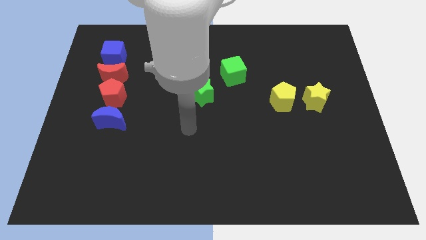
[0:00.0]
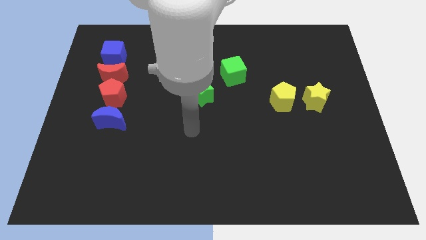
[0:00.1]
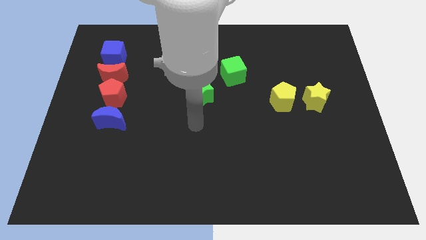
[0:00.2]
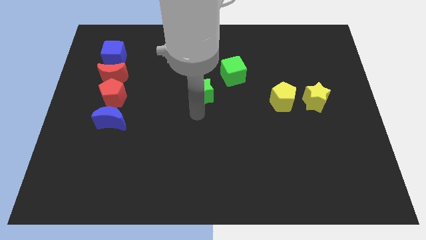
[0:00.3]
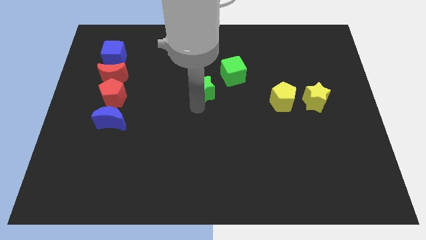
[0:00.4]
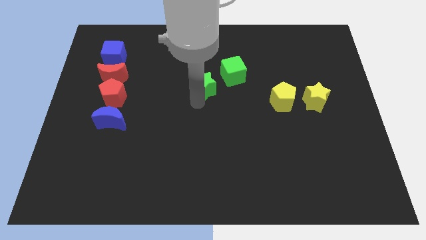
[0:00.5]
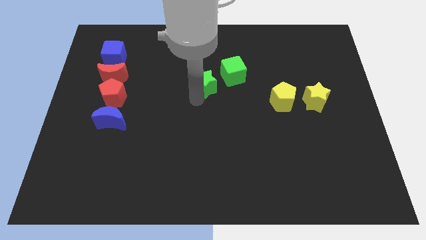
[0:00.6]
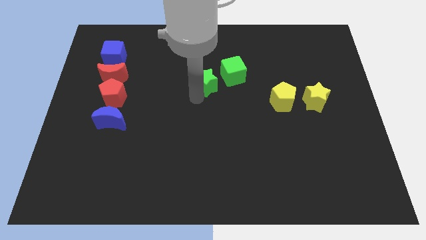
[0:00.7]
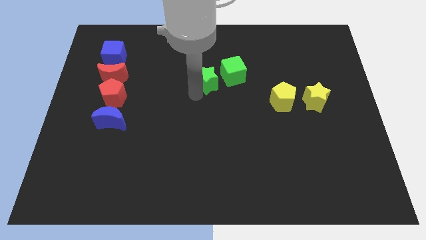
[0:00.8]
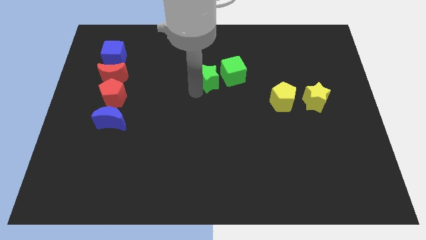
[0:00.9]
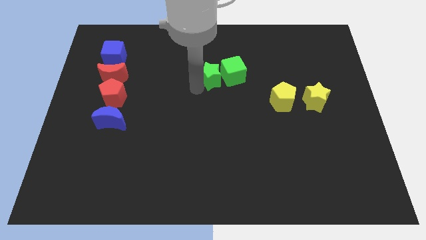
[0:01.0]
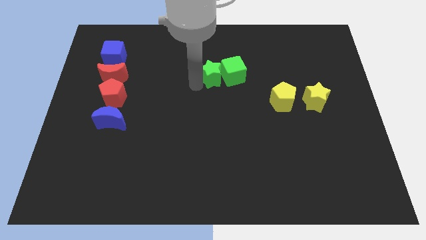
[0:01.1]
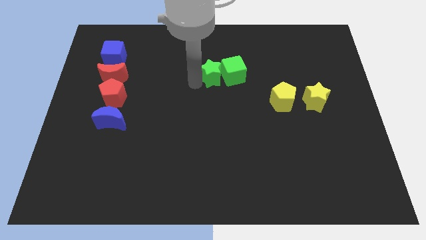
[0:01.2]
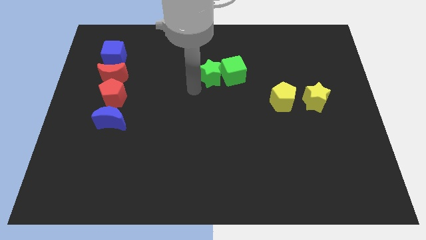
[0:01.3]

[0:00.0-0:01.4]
push the green star to the left of the green cube

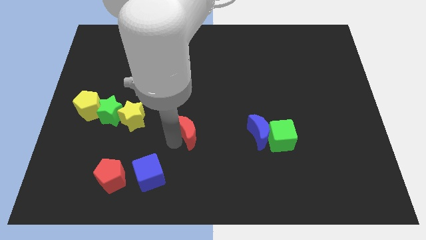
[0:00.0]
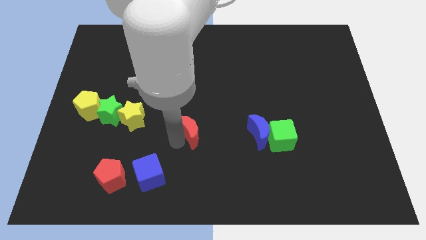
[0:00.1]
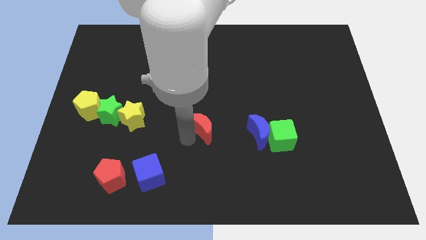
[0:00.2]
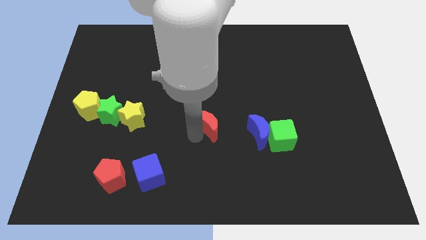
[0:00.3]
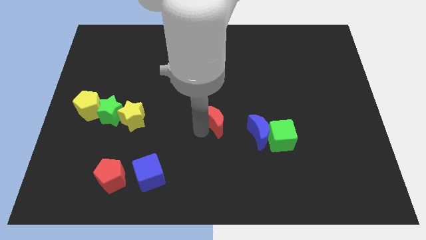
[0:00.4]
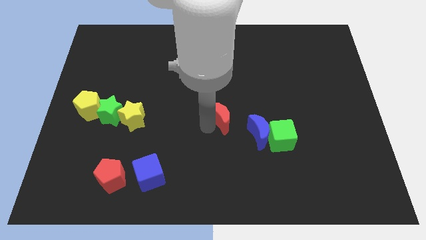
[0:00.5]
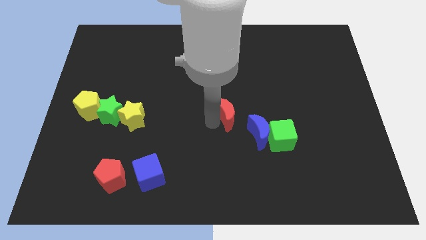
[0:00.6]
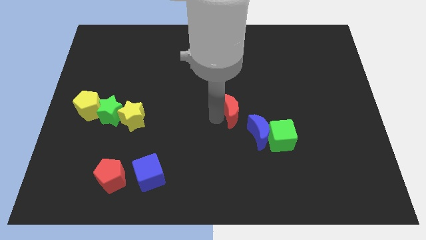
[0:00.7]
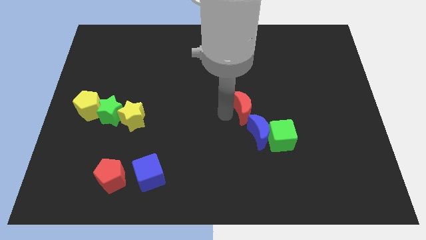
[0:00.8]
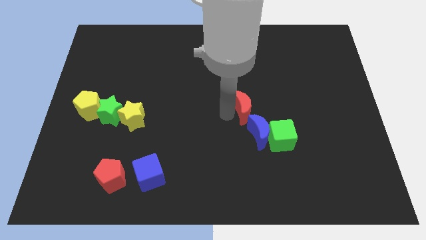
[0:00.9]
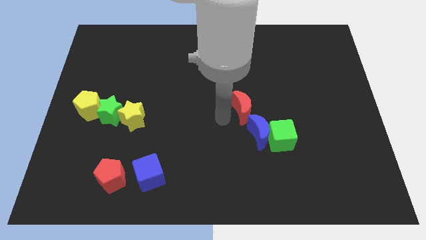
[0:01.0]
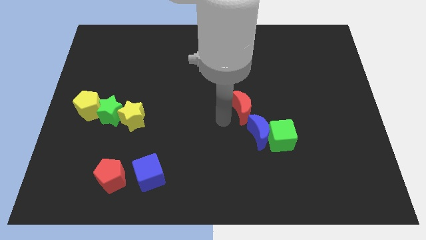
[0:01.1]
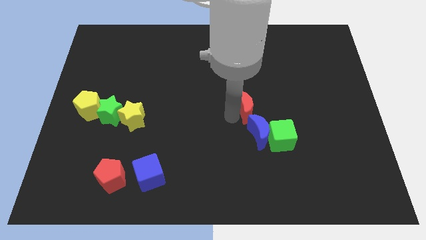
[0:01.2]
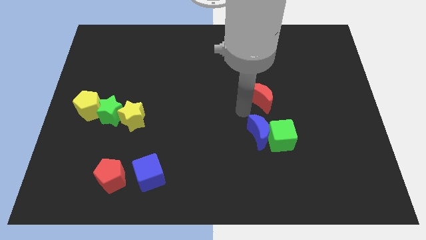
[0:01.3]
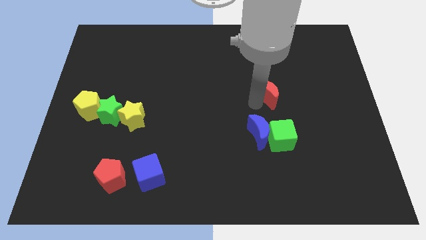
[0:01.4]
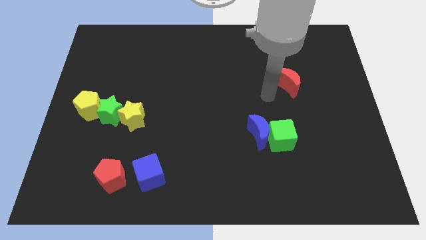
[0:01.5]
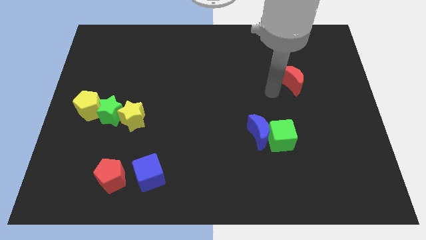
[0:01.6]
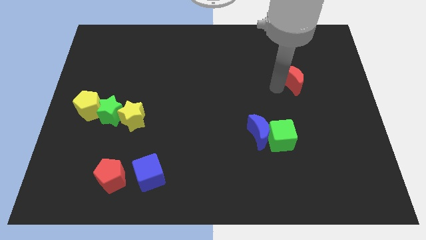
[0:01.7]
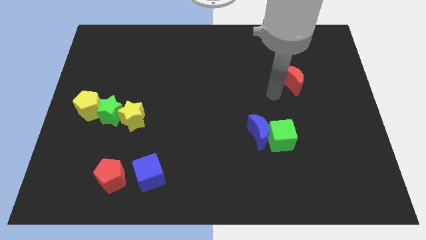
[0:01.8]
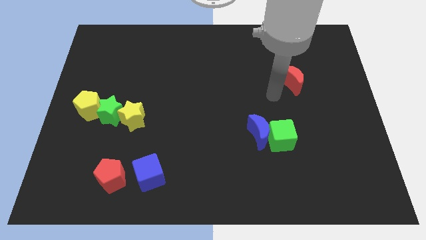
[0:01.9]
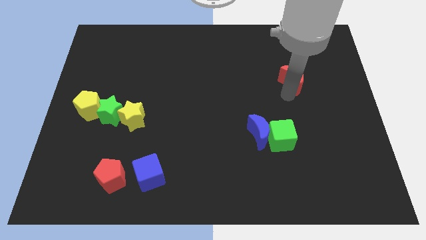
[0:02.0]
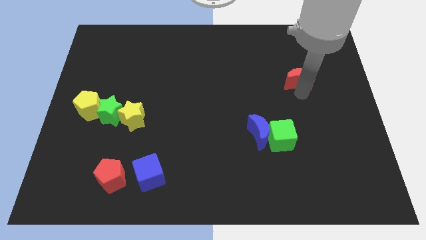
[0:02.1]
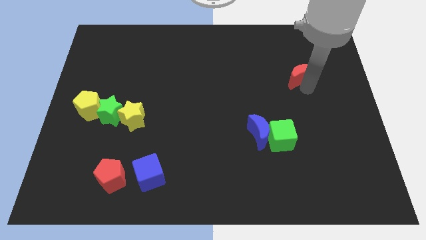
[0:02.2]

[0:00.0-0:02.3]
move the red crescent to the top right of the green cube

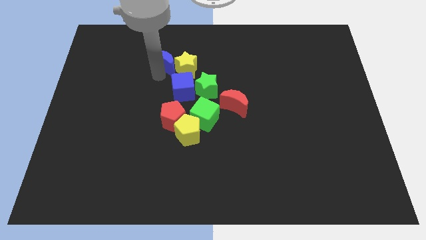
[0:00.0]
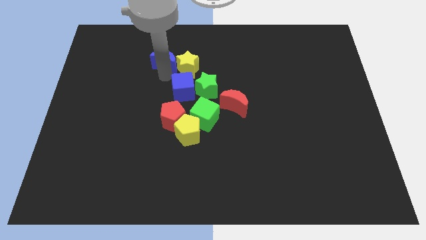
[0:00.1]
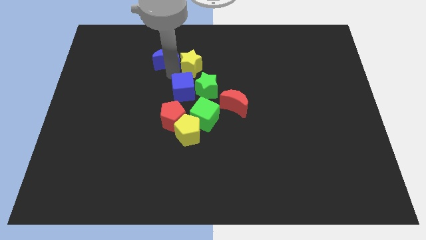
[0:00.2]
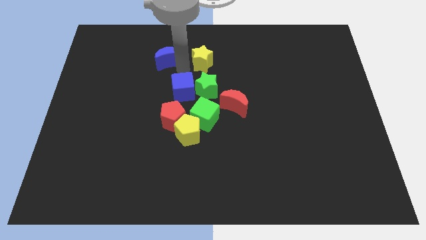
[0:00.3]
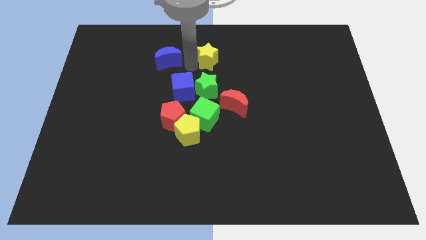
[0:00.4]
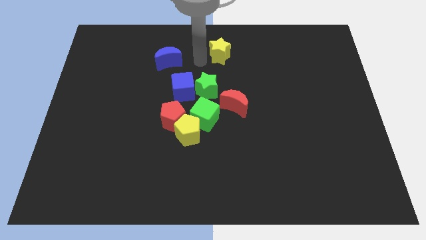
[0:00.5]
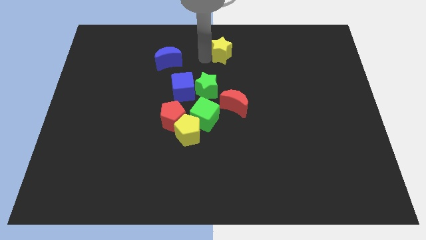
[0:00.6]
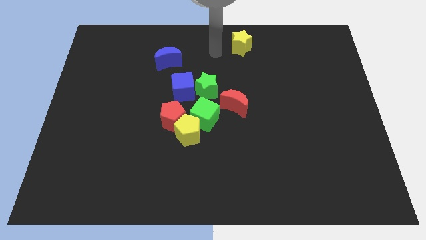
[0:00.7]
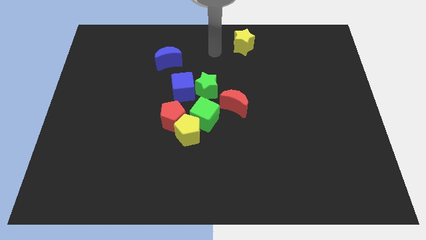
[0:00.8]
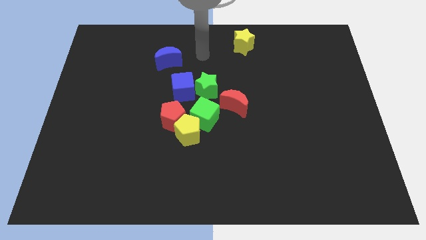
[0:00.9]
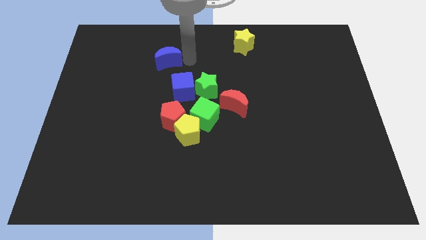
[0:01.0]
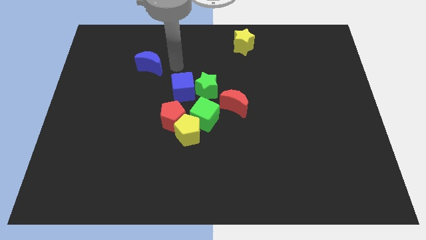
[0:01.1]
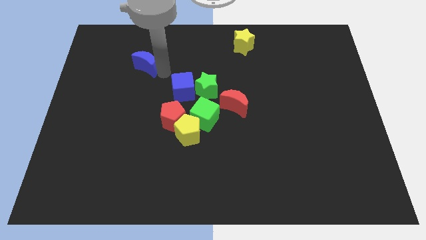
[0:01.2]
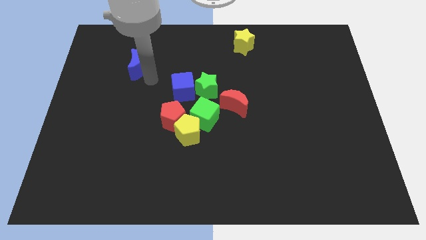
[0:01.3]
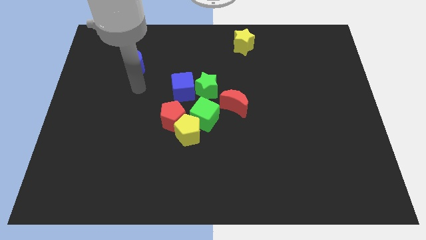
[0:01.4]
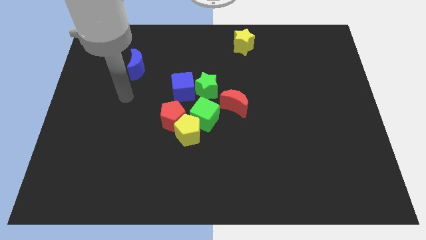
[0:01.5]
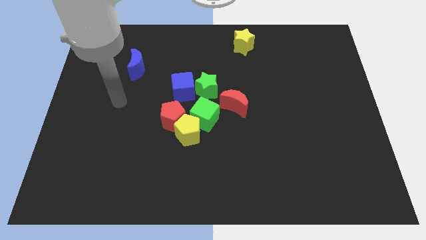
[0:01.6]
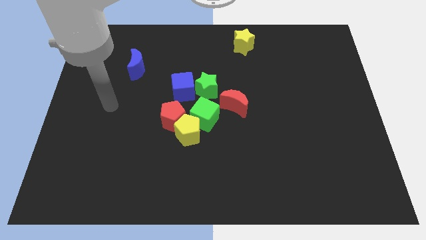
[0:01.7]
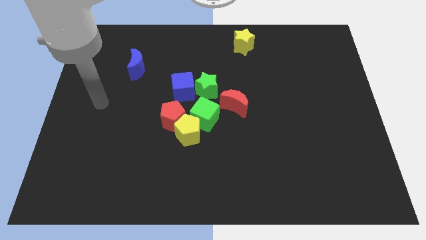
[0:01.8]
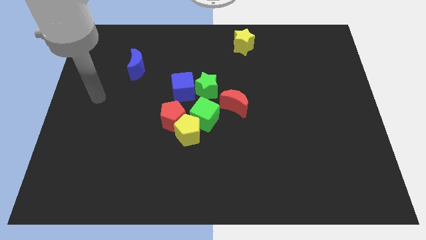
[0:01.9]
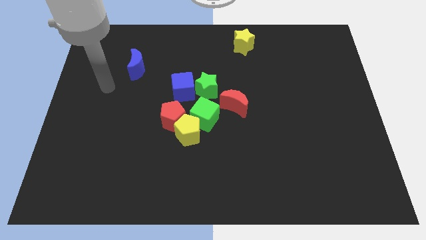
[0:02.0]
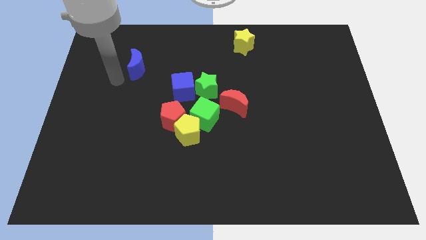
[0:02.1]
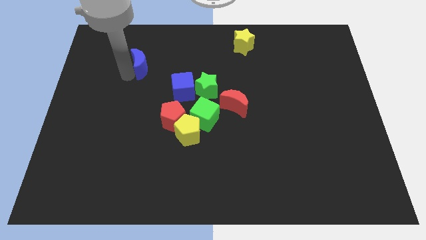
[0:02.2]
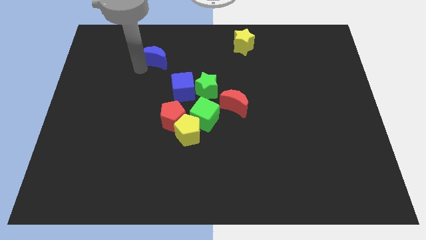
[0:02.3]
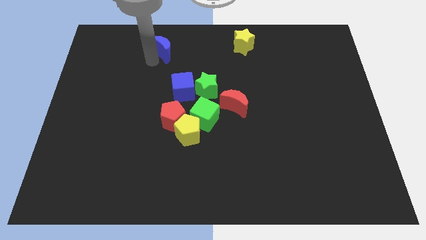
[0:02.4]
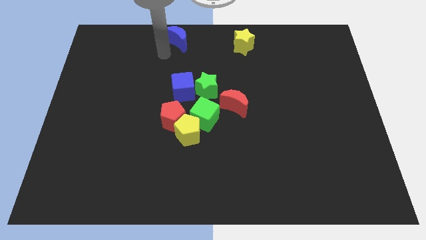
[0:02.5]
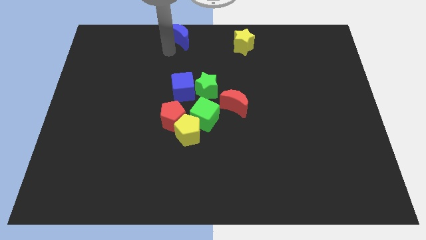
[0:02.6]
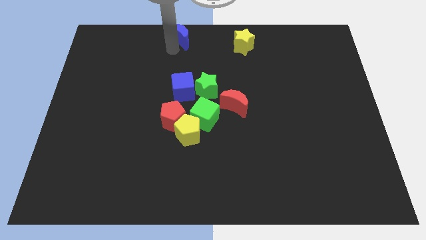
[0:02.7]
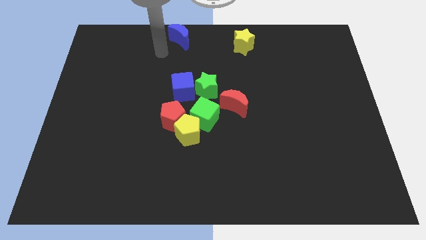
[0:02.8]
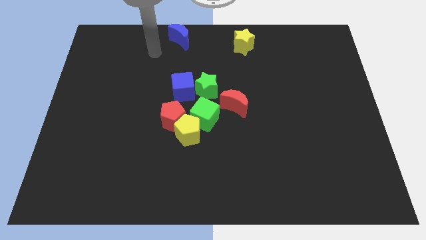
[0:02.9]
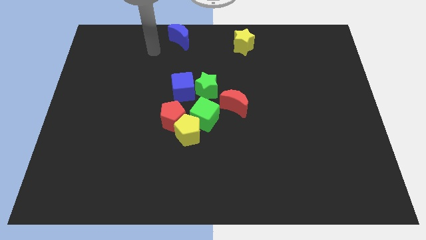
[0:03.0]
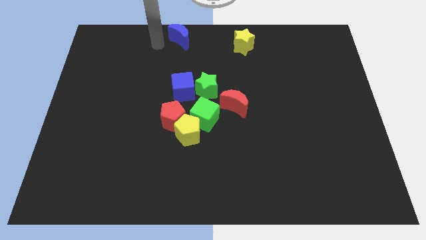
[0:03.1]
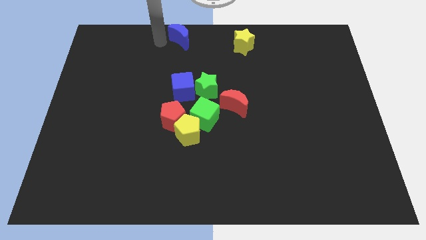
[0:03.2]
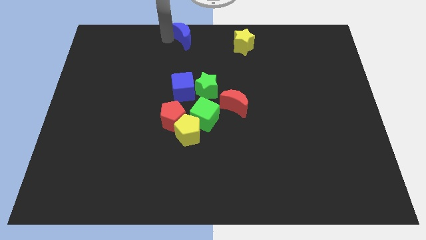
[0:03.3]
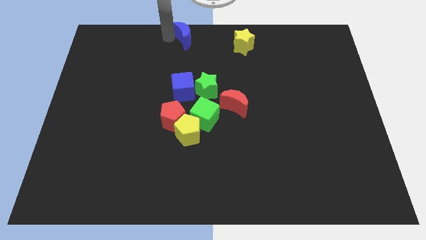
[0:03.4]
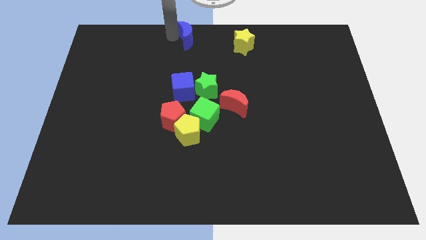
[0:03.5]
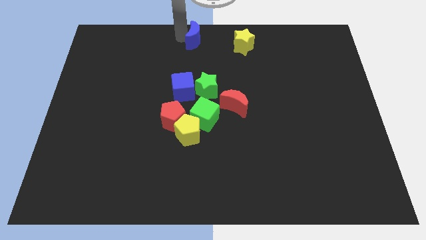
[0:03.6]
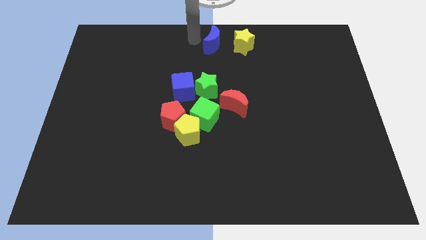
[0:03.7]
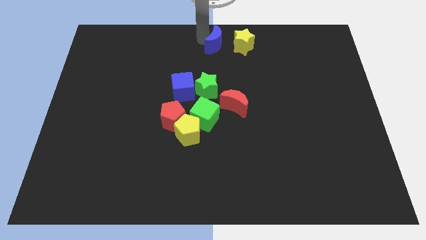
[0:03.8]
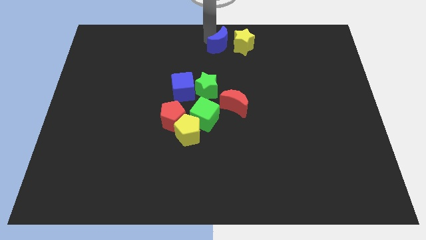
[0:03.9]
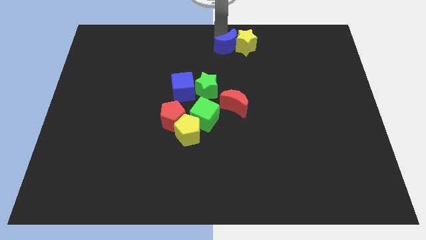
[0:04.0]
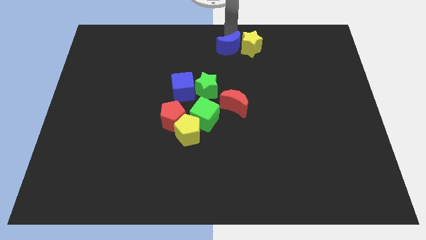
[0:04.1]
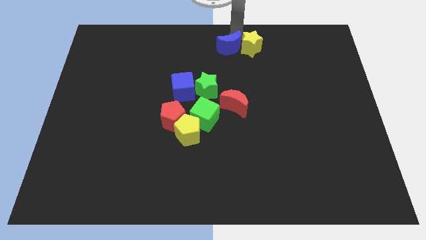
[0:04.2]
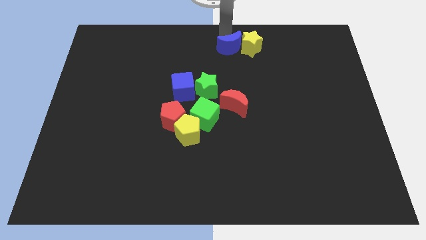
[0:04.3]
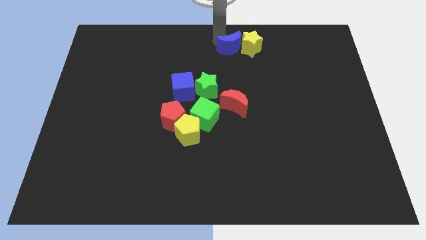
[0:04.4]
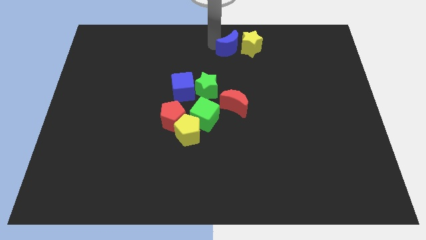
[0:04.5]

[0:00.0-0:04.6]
push the blue crescent and yellow pentagon to the top center

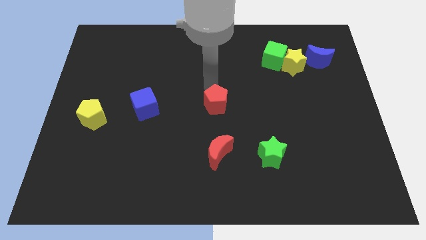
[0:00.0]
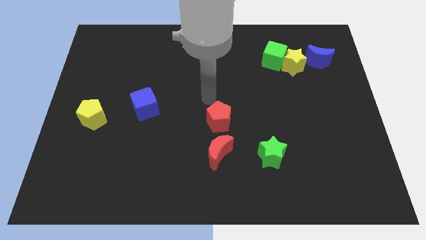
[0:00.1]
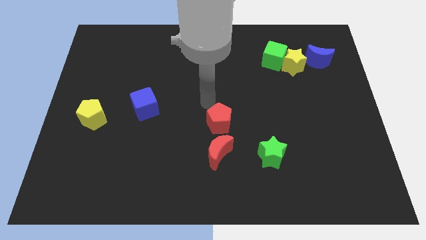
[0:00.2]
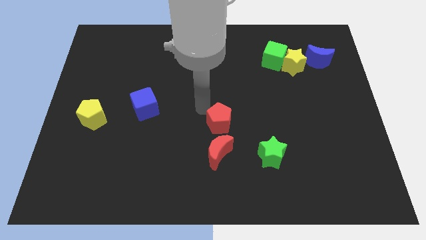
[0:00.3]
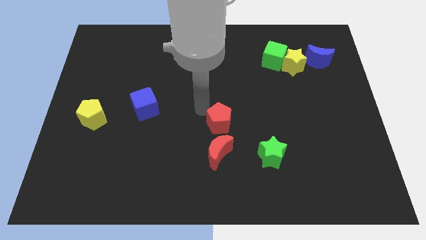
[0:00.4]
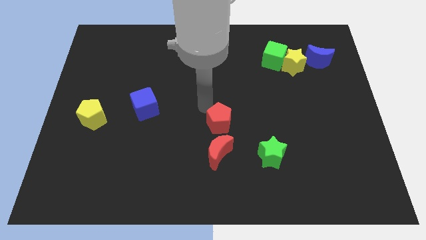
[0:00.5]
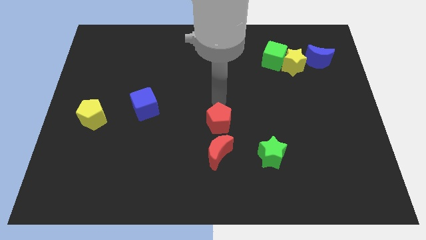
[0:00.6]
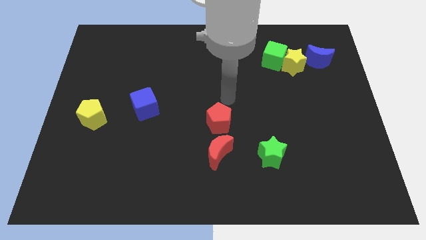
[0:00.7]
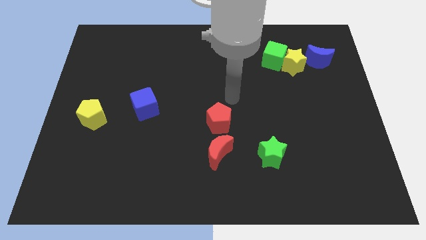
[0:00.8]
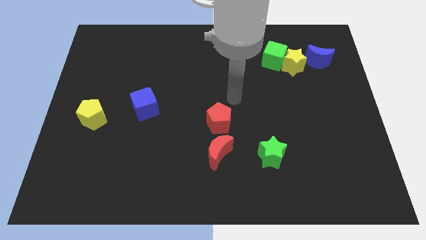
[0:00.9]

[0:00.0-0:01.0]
place red pentagon above red moon
